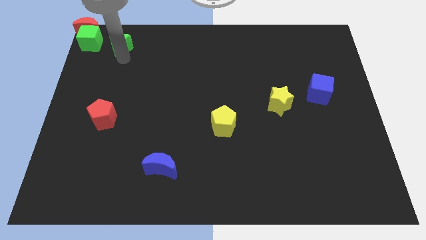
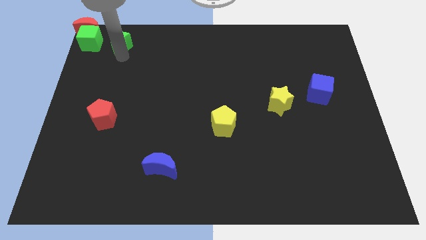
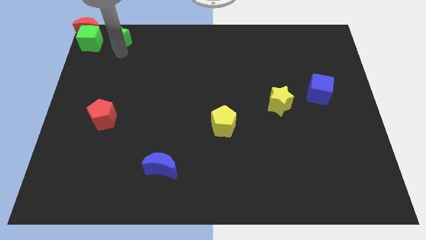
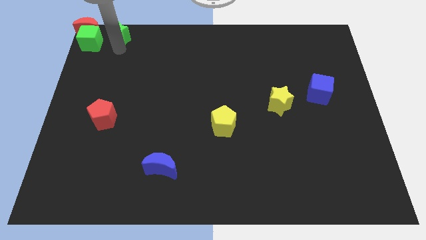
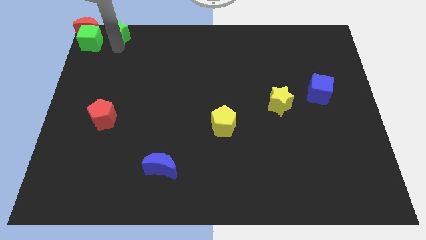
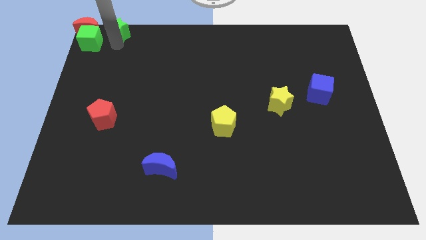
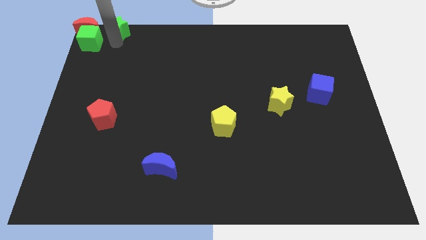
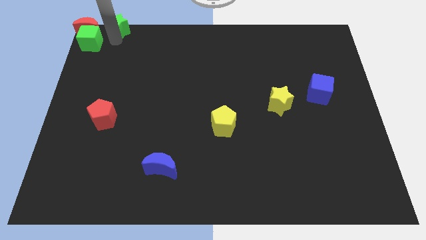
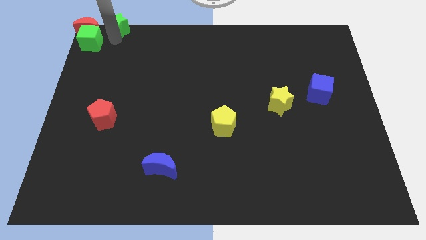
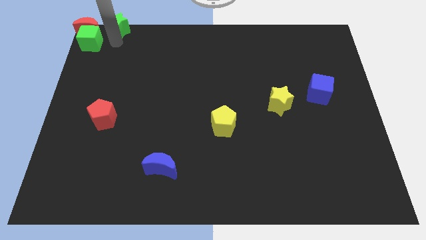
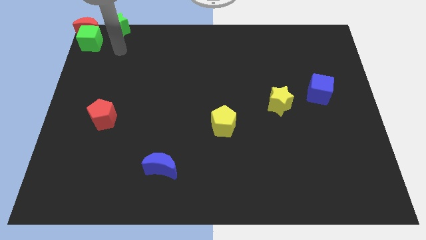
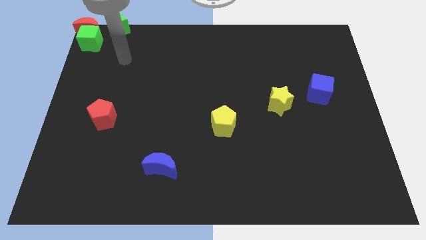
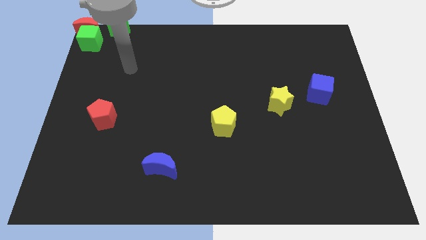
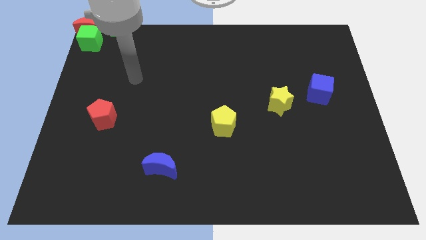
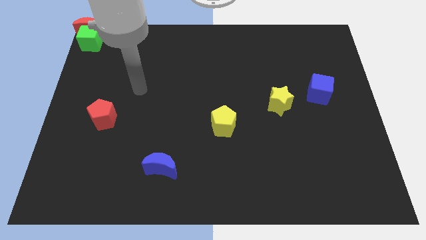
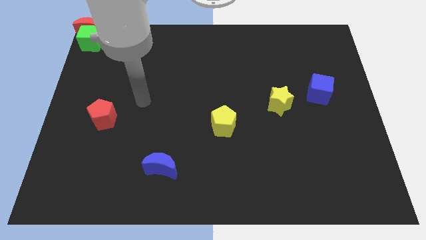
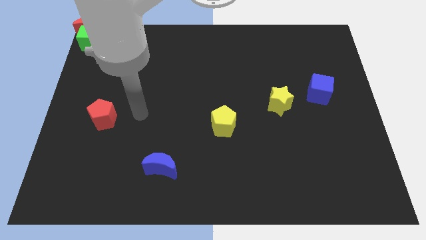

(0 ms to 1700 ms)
move the green star to the right of the red moon

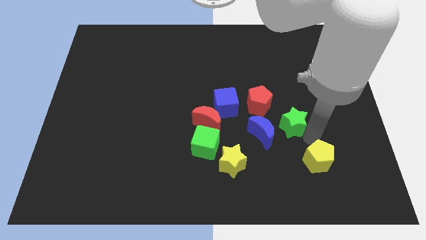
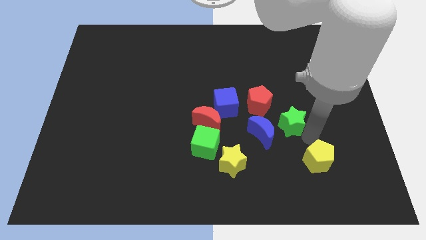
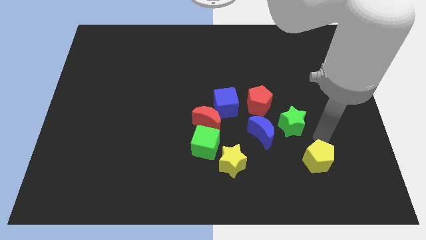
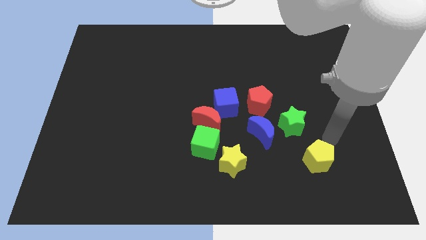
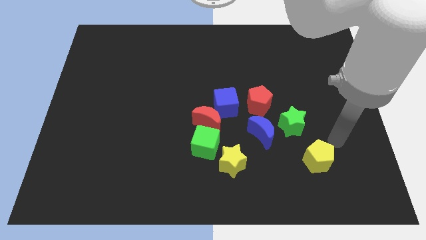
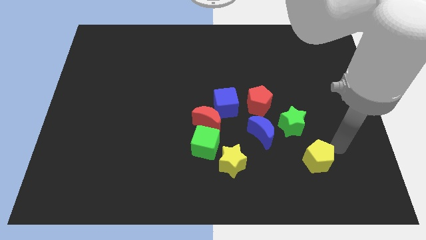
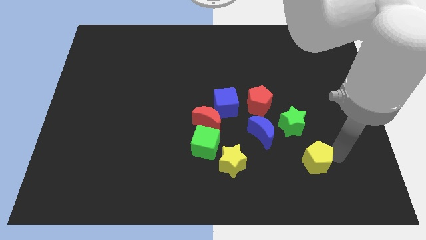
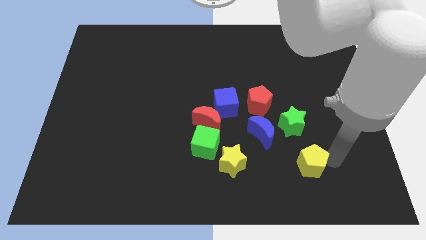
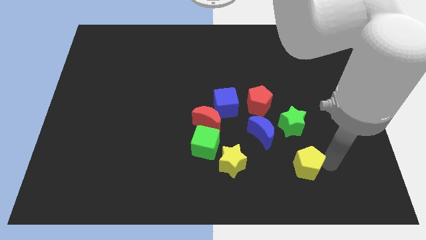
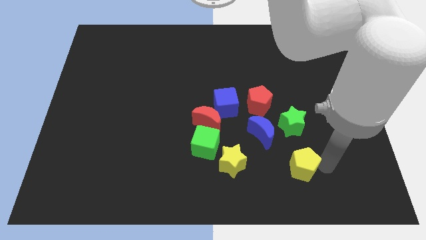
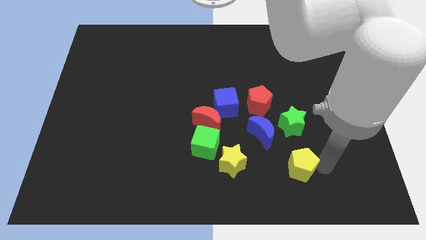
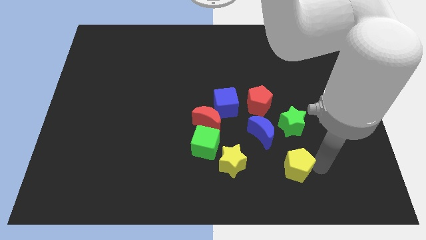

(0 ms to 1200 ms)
place yellow pentagon below the green star

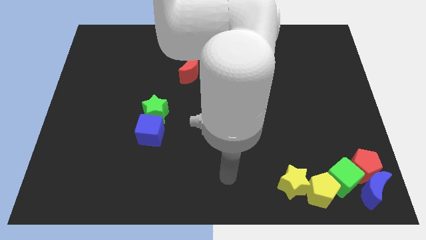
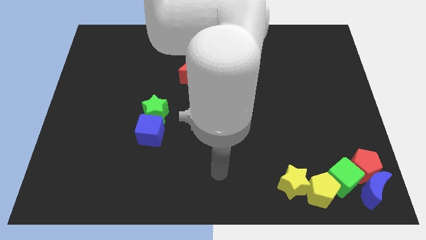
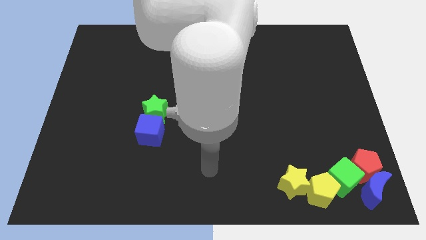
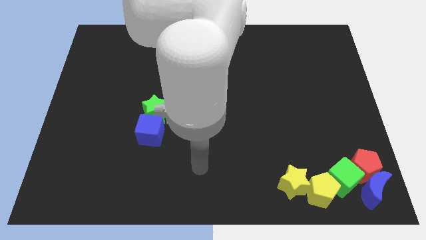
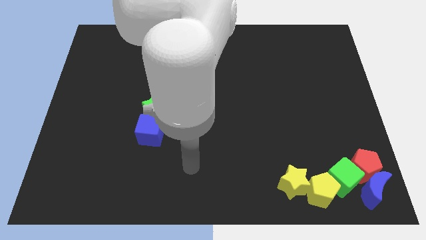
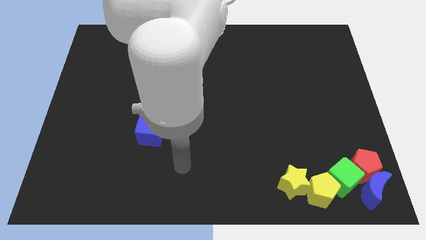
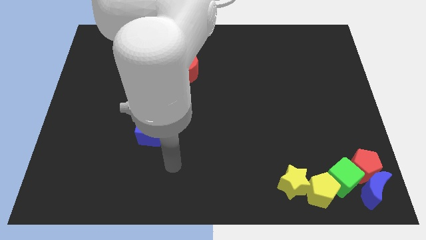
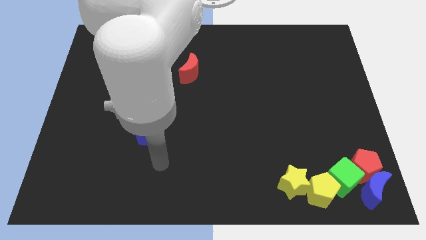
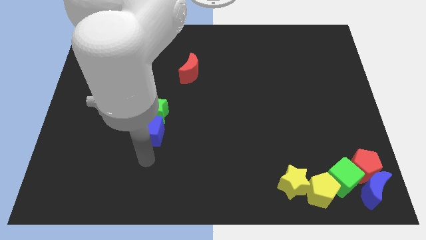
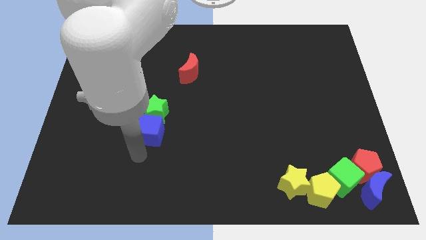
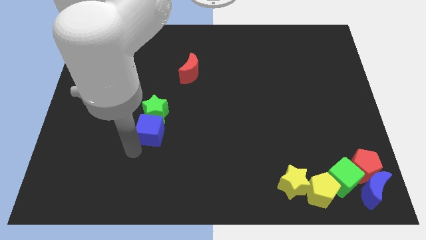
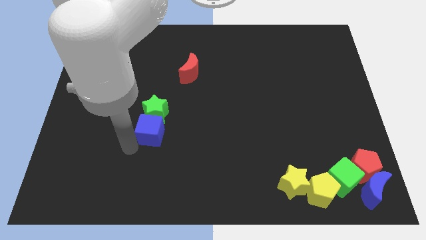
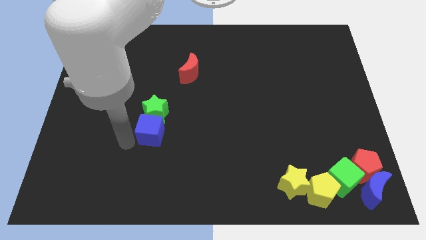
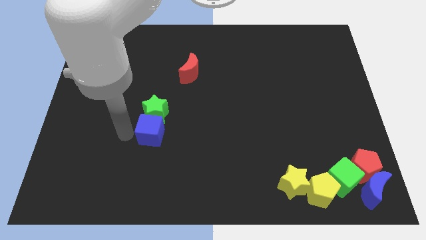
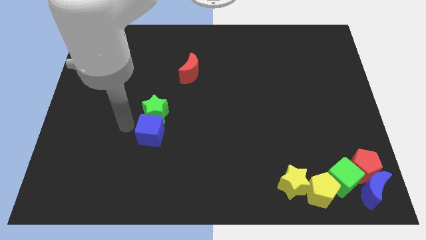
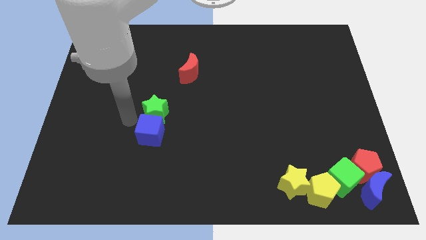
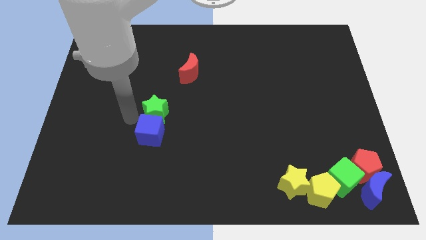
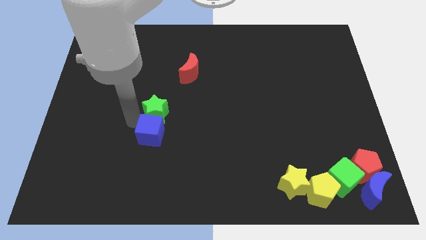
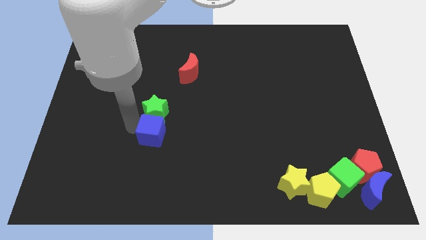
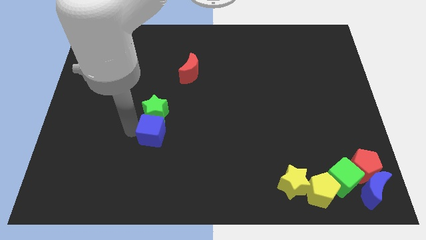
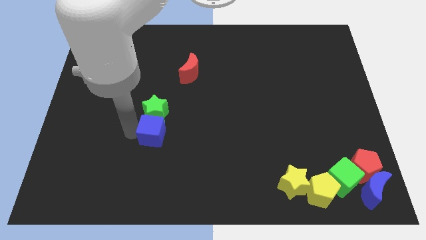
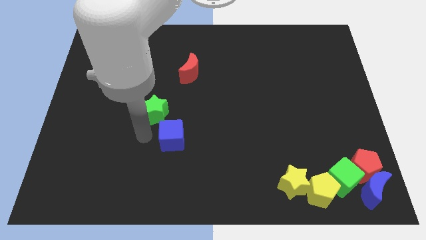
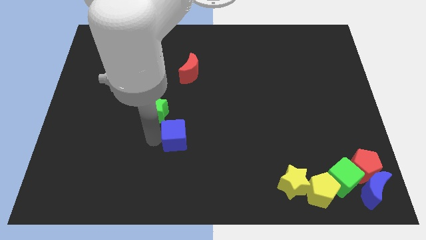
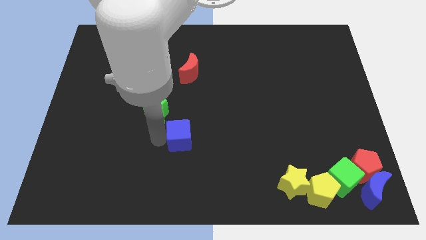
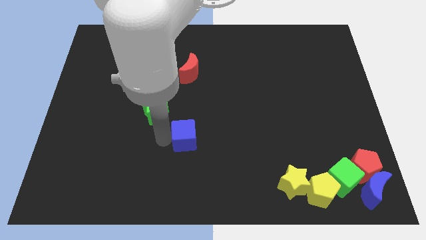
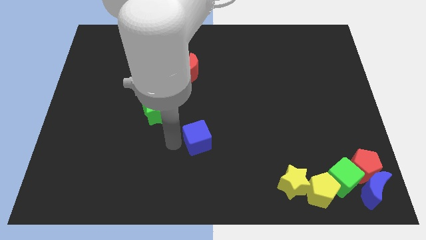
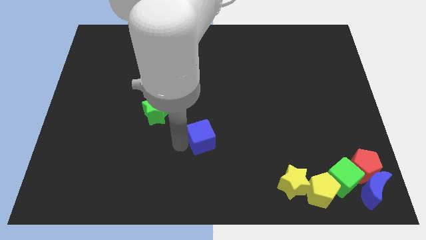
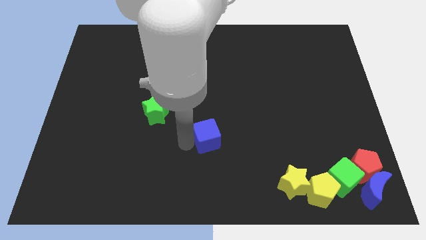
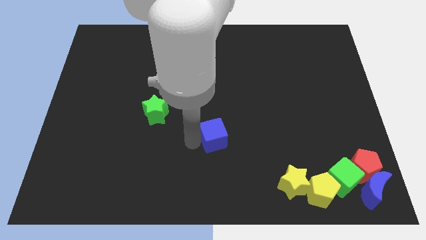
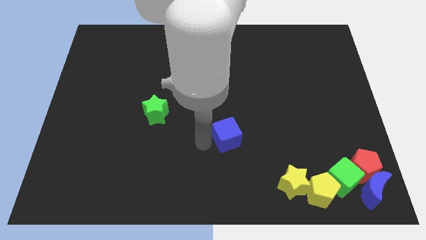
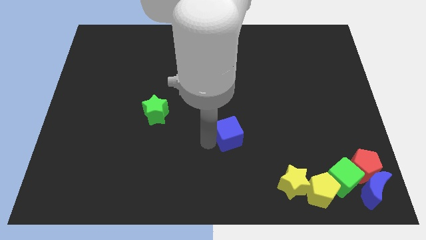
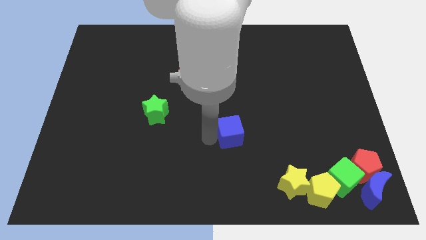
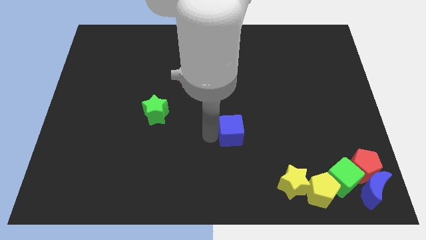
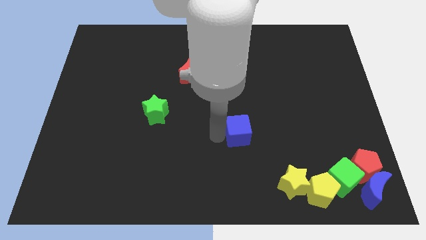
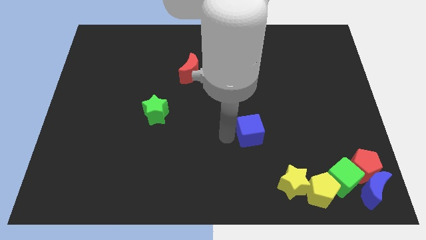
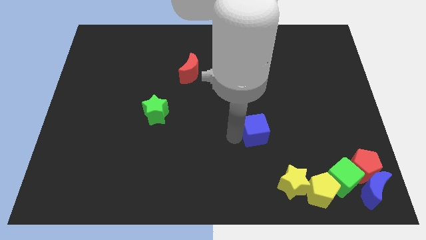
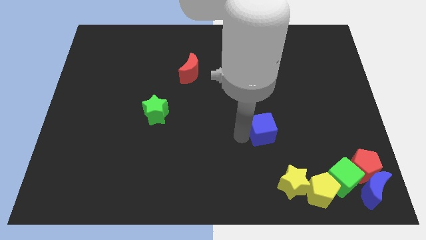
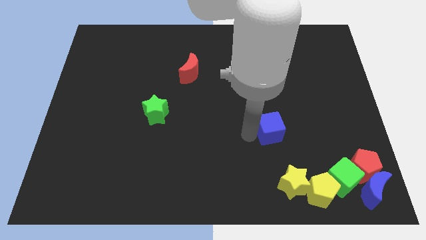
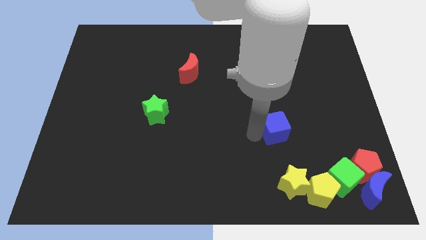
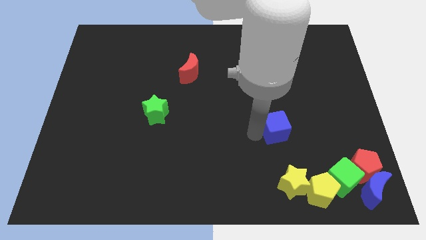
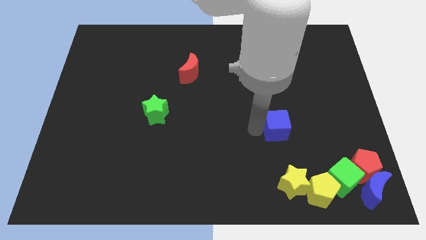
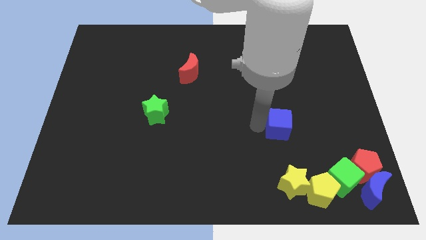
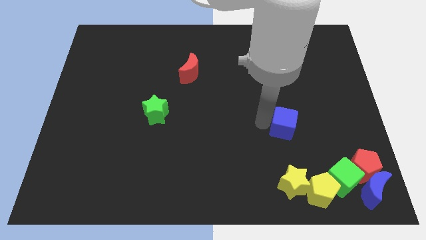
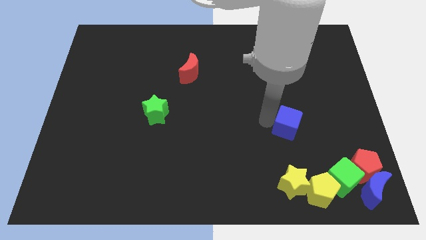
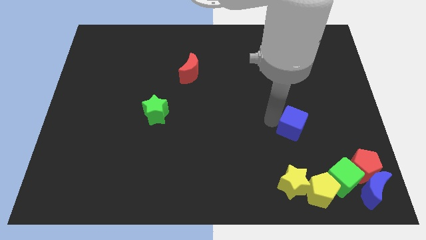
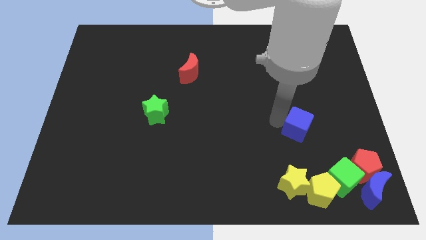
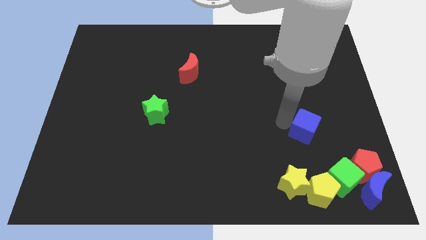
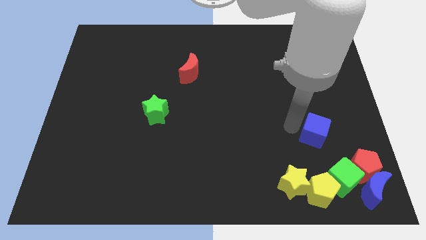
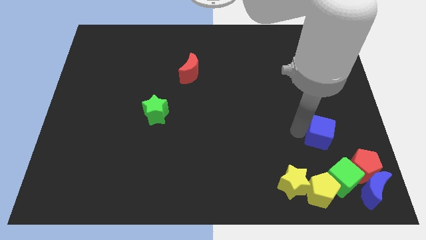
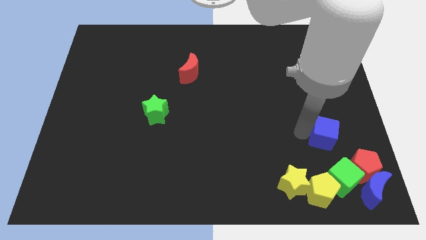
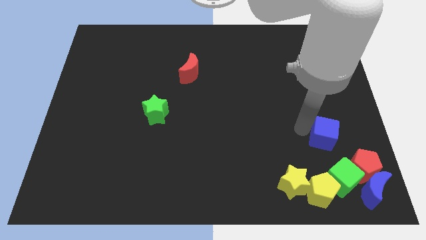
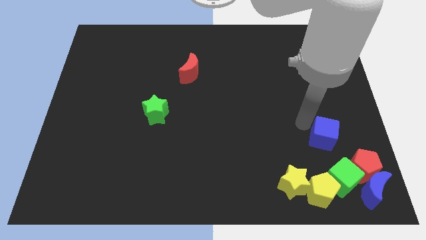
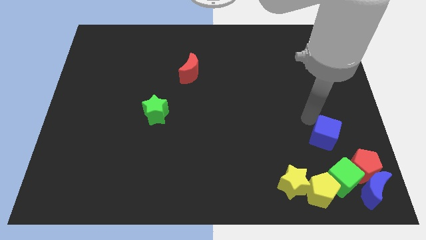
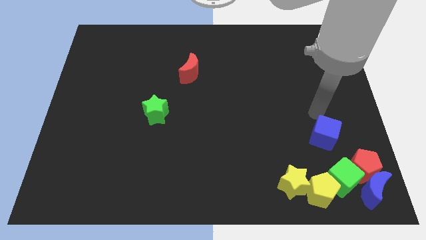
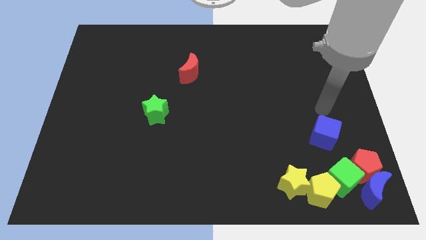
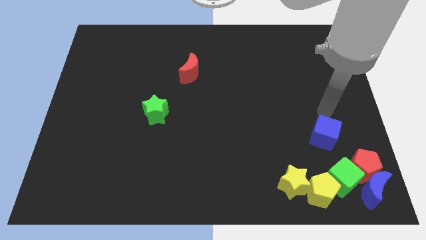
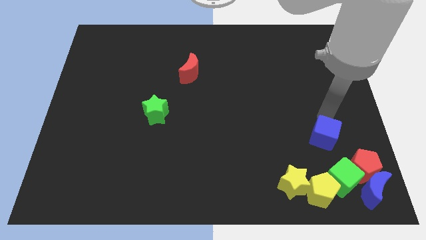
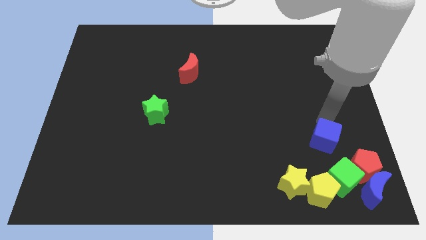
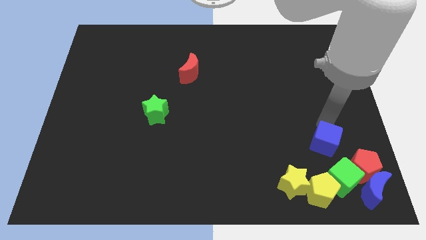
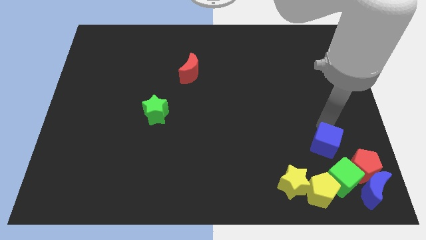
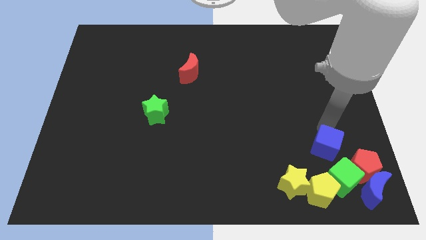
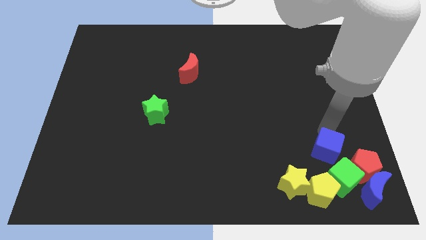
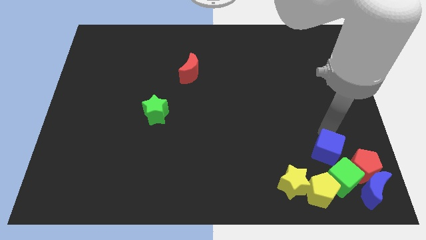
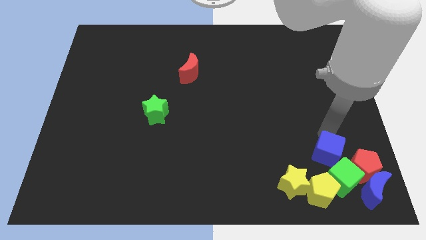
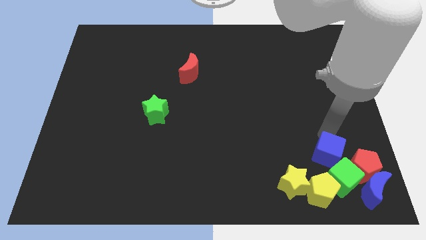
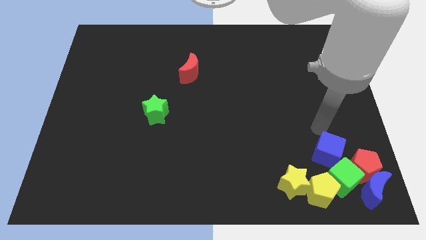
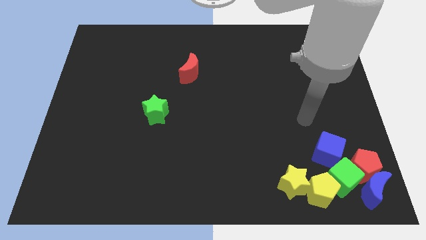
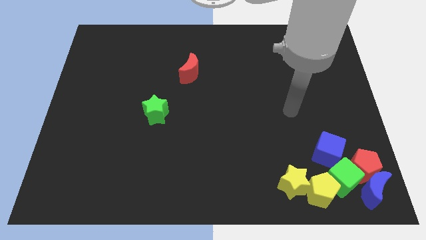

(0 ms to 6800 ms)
push the blue cube into the green cube
